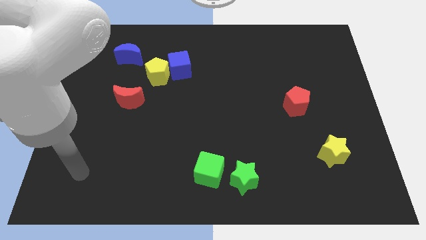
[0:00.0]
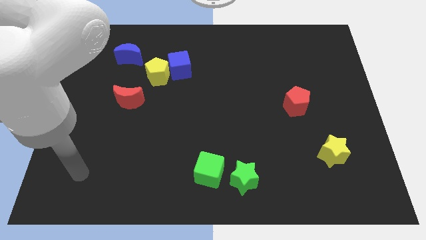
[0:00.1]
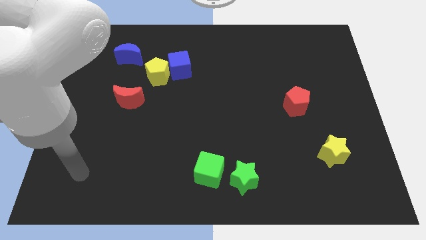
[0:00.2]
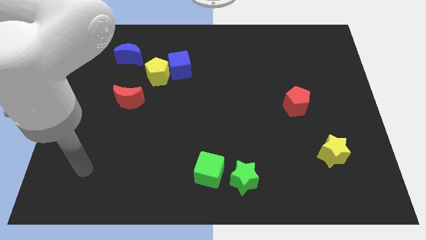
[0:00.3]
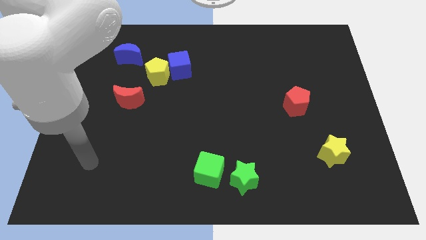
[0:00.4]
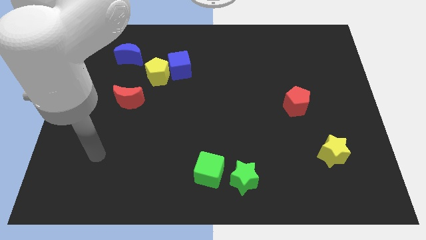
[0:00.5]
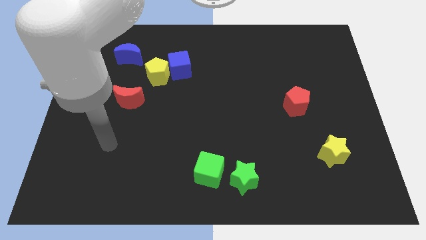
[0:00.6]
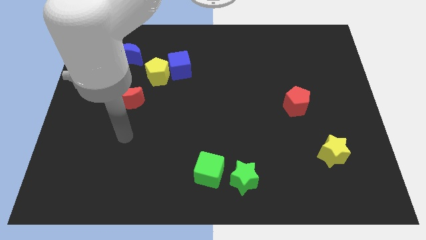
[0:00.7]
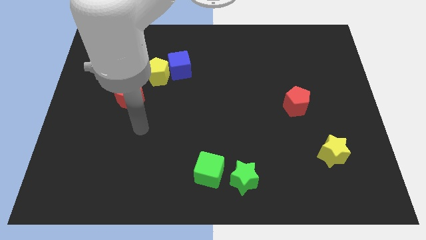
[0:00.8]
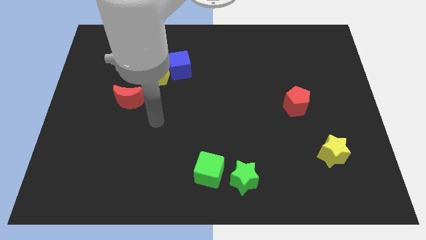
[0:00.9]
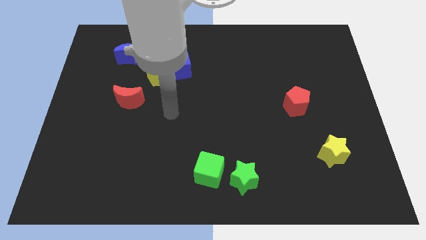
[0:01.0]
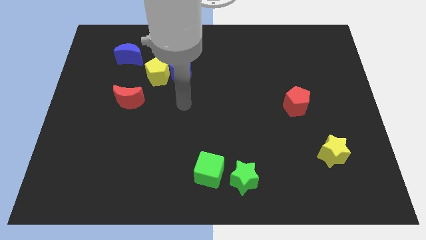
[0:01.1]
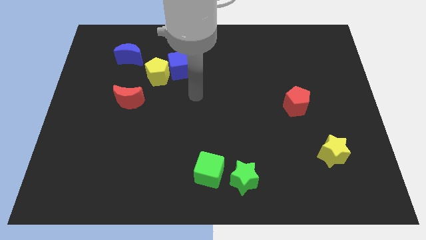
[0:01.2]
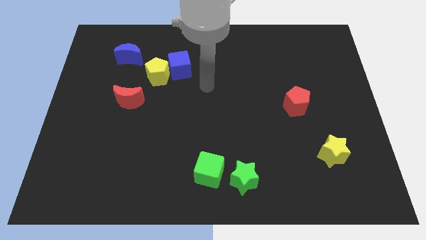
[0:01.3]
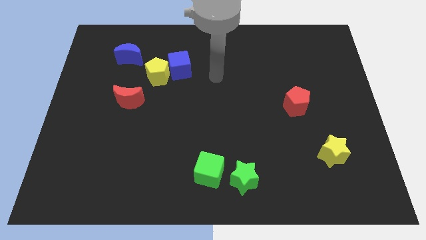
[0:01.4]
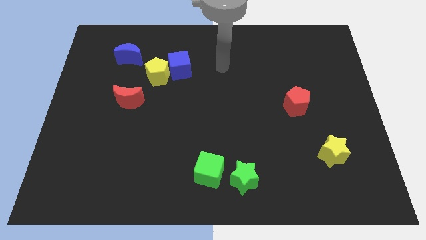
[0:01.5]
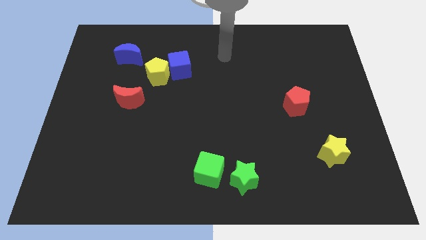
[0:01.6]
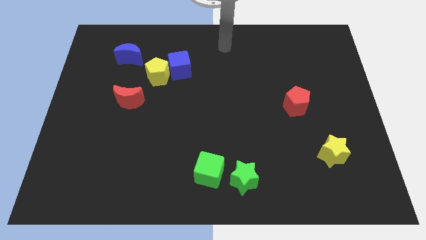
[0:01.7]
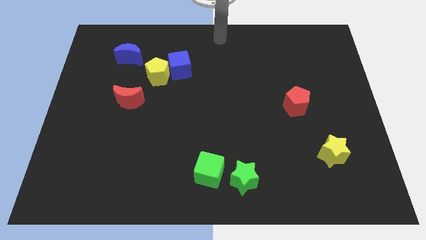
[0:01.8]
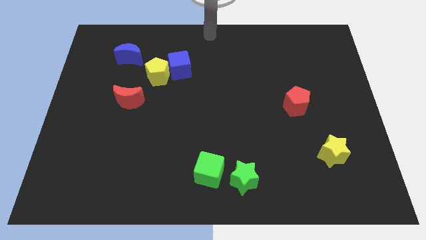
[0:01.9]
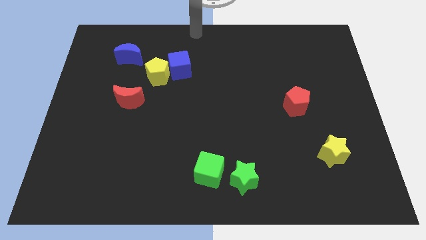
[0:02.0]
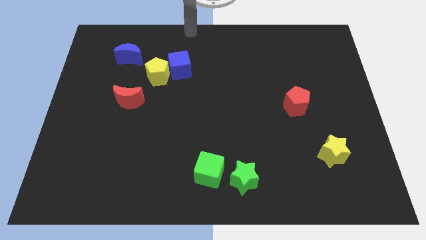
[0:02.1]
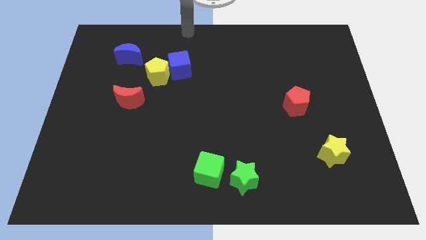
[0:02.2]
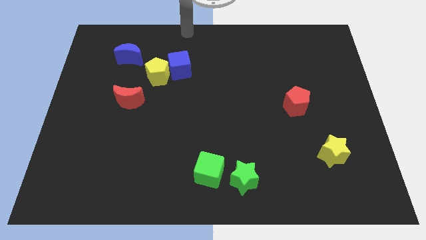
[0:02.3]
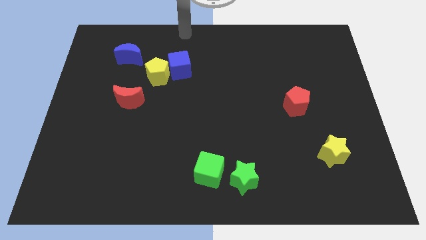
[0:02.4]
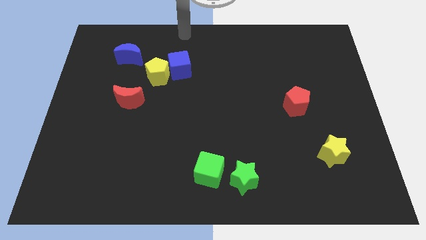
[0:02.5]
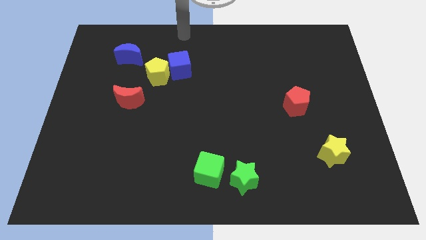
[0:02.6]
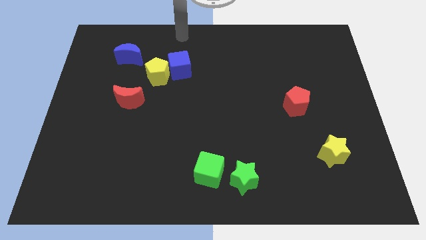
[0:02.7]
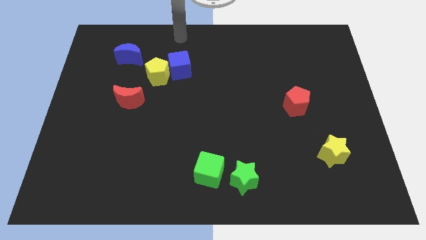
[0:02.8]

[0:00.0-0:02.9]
place your arm above the blue cube

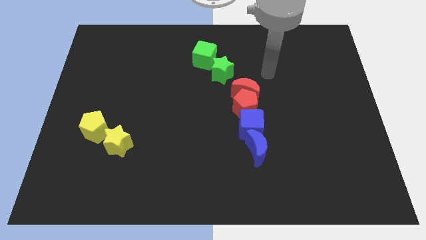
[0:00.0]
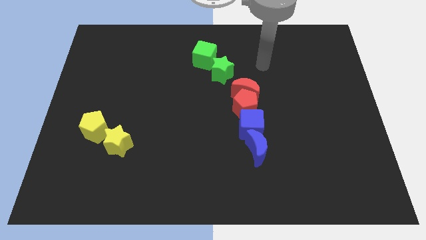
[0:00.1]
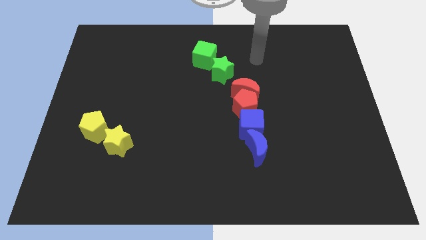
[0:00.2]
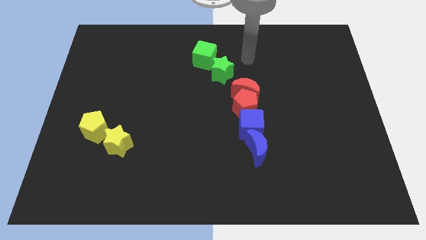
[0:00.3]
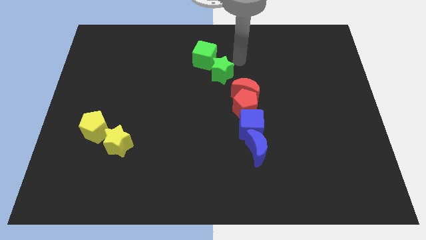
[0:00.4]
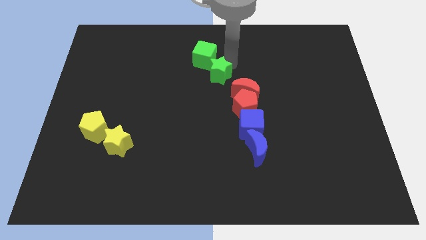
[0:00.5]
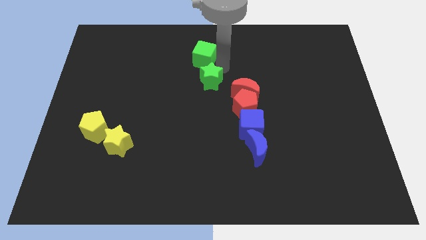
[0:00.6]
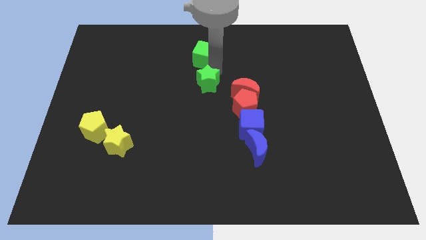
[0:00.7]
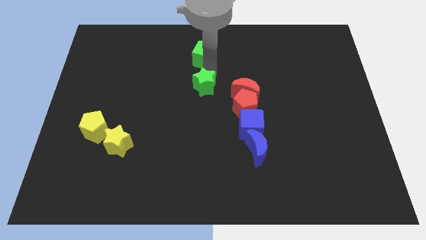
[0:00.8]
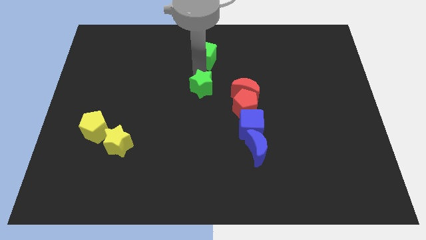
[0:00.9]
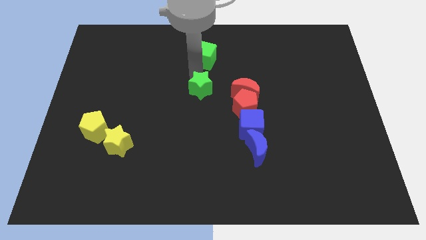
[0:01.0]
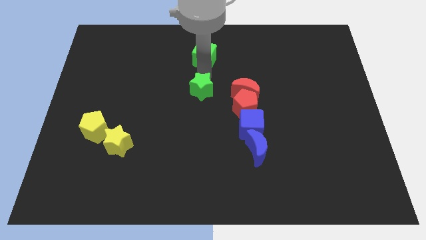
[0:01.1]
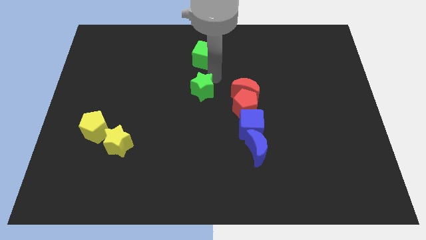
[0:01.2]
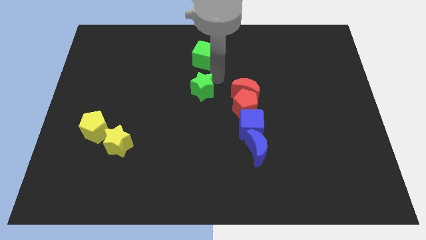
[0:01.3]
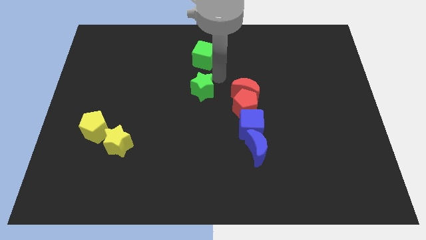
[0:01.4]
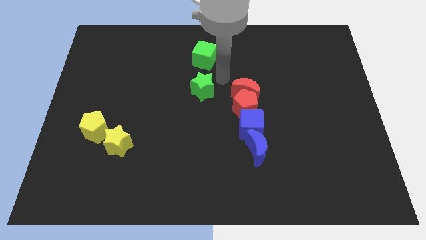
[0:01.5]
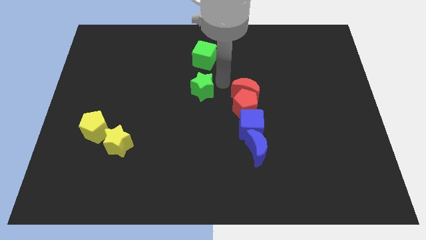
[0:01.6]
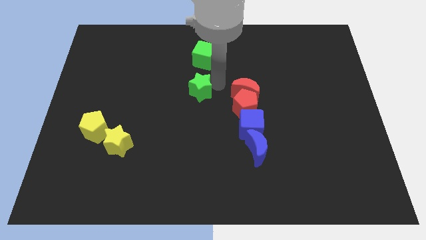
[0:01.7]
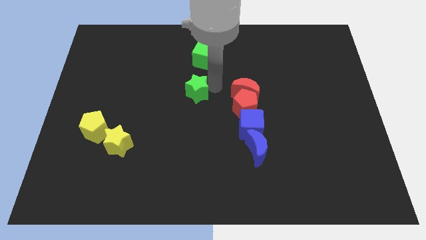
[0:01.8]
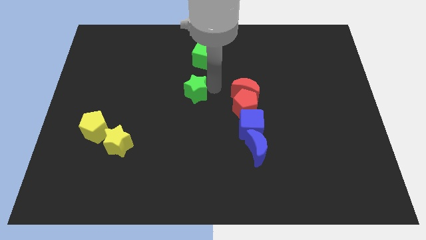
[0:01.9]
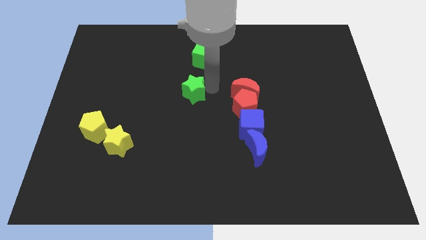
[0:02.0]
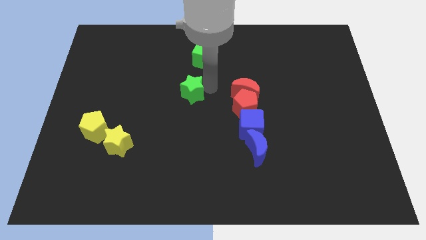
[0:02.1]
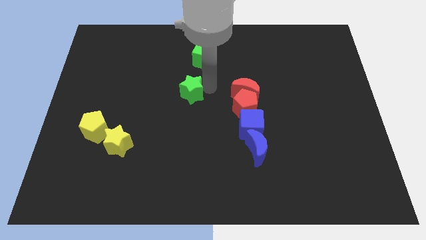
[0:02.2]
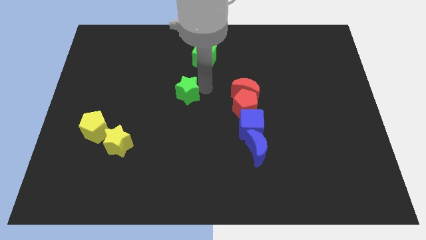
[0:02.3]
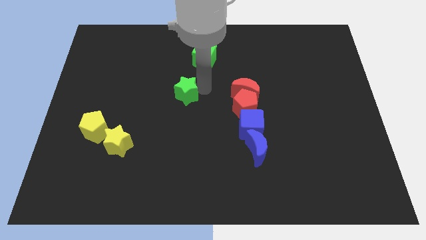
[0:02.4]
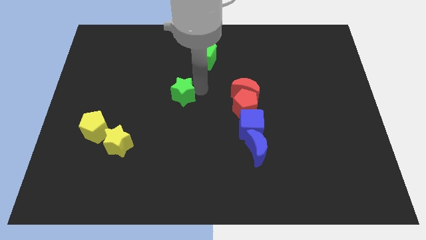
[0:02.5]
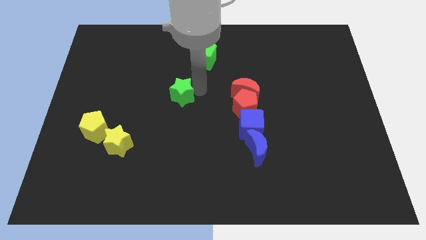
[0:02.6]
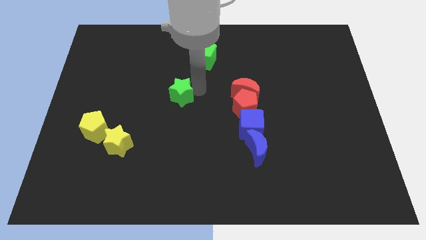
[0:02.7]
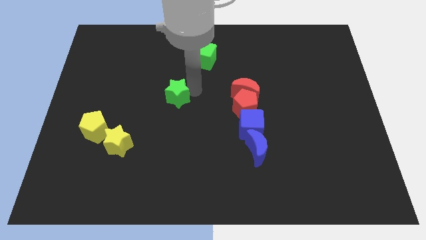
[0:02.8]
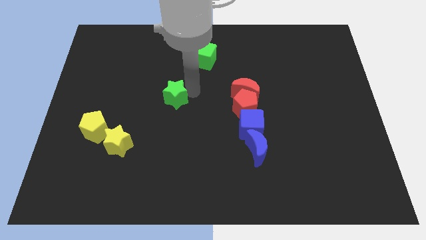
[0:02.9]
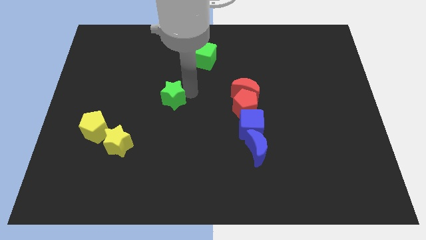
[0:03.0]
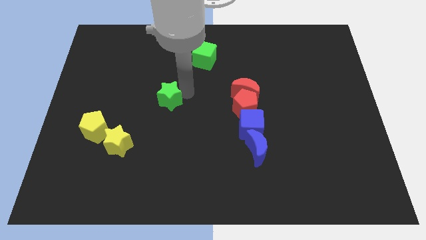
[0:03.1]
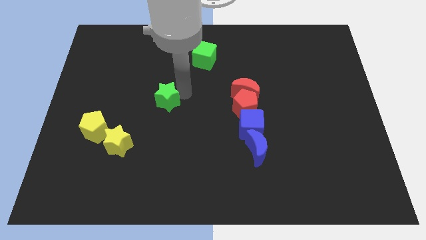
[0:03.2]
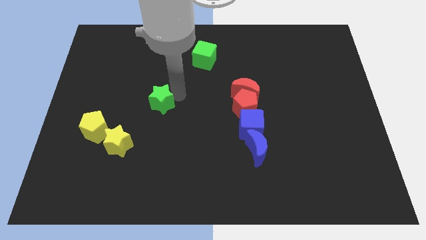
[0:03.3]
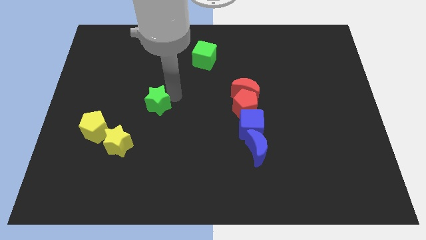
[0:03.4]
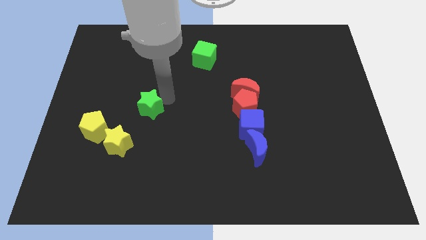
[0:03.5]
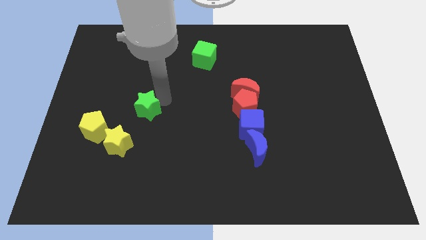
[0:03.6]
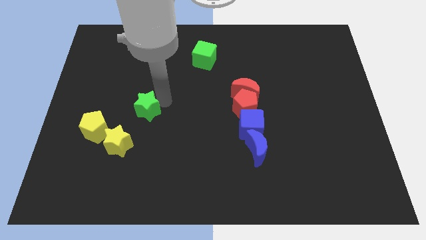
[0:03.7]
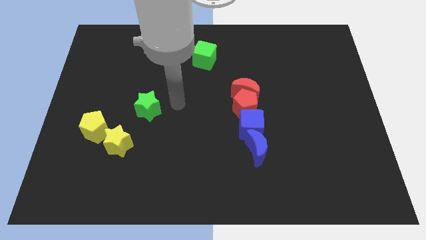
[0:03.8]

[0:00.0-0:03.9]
place the green star above the yellow star

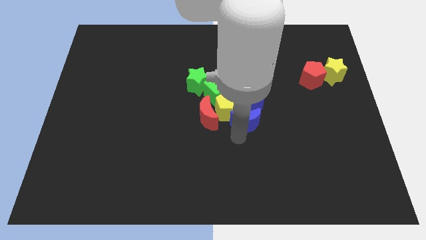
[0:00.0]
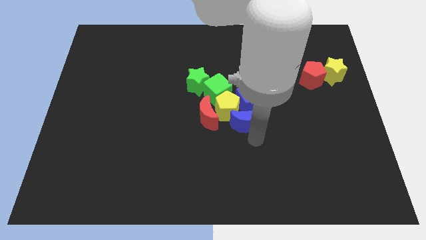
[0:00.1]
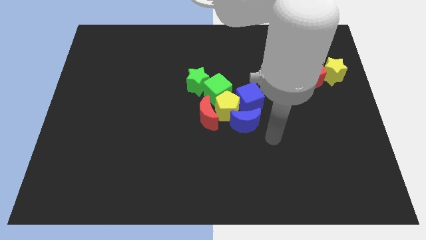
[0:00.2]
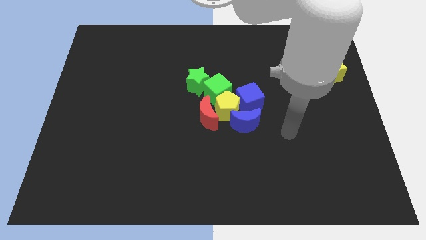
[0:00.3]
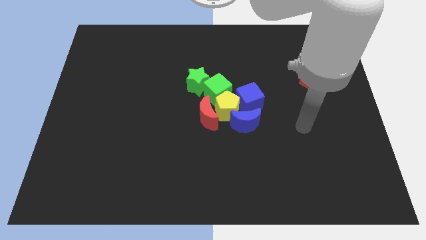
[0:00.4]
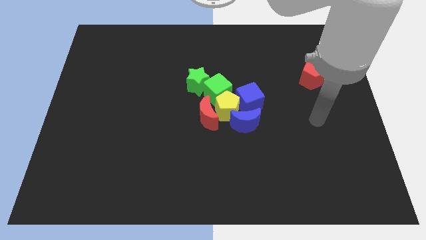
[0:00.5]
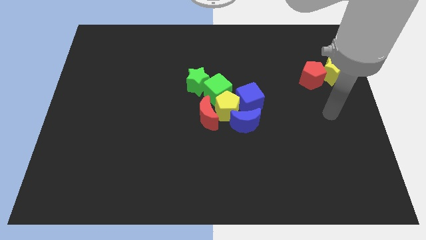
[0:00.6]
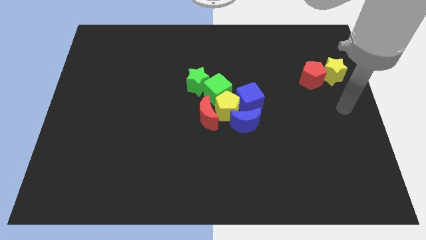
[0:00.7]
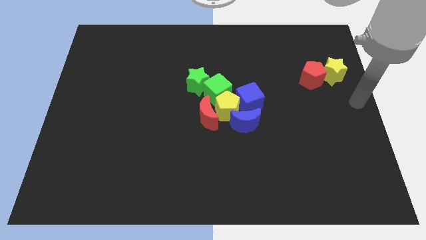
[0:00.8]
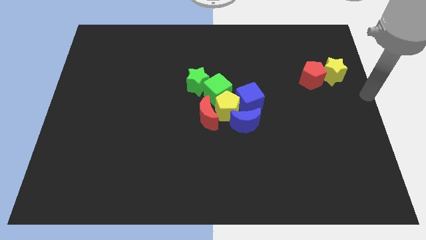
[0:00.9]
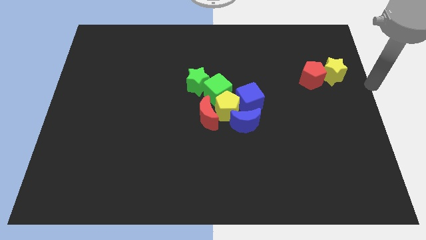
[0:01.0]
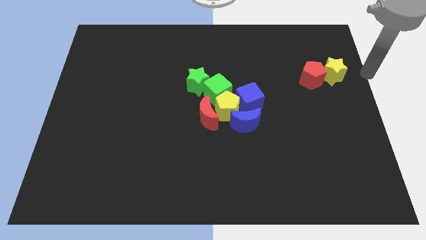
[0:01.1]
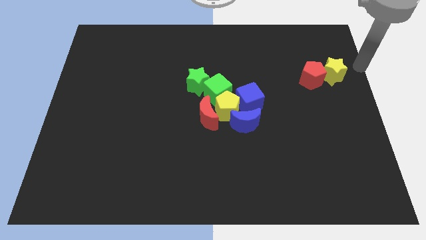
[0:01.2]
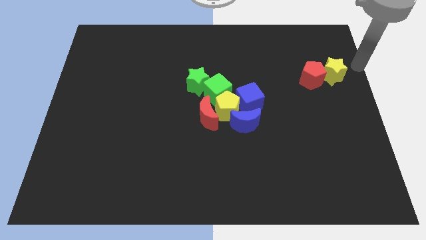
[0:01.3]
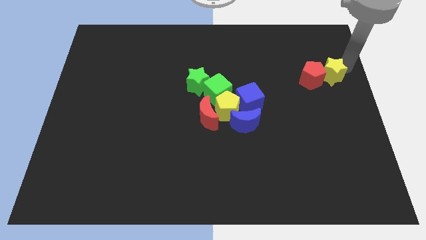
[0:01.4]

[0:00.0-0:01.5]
move your arm on top of the yellow star

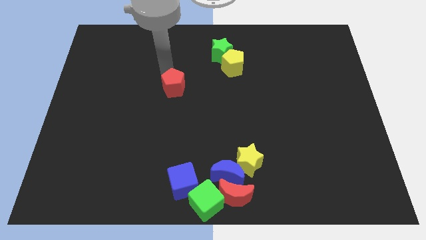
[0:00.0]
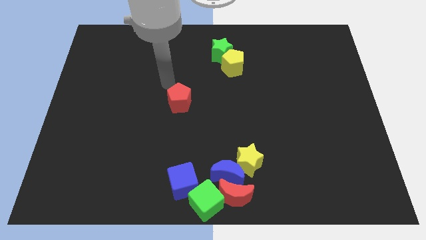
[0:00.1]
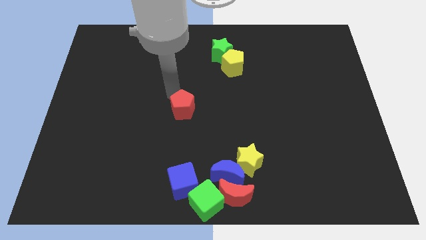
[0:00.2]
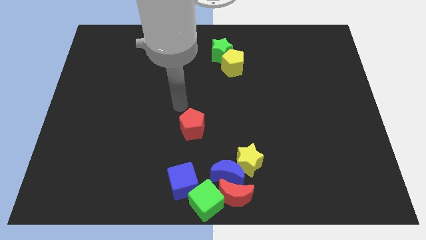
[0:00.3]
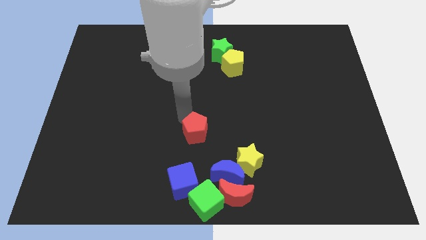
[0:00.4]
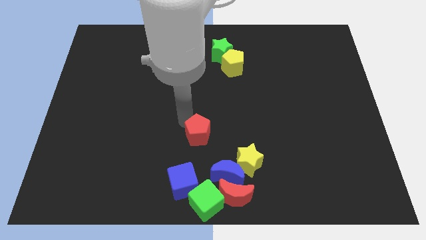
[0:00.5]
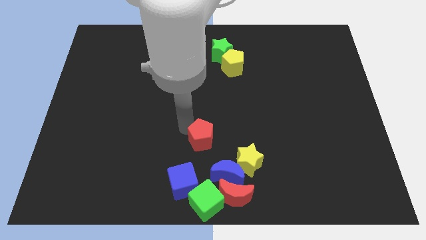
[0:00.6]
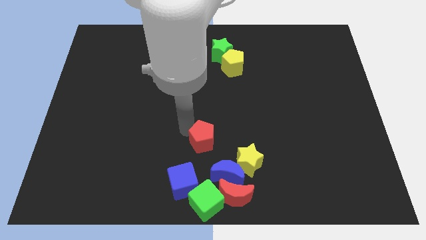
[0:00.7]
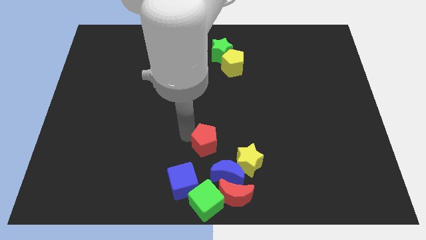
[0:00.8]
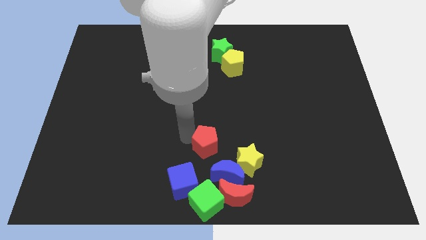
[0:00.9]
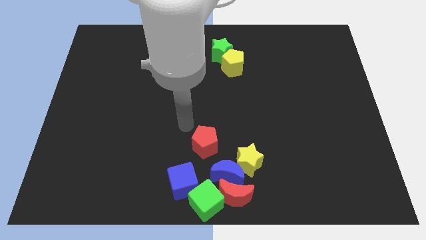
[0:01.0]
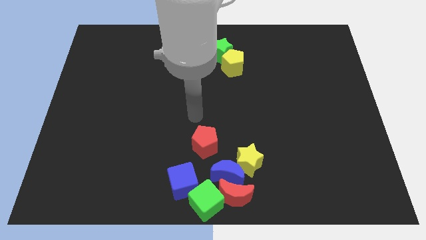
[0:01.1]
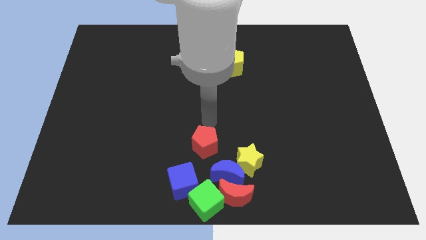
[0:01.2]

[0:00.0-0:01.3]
push the red pentagon to the group of blocks at the bottom center of the board
